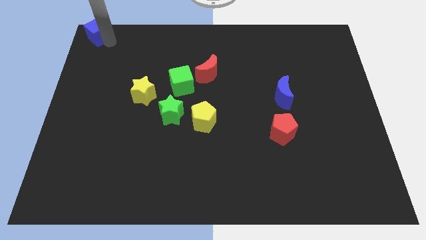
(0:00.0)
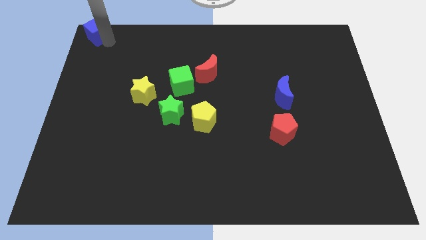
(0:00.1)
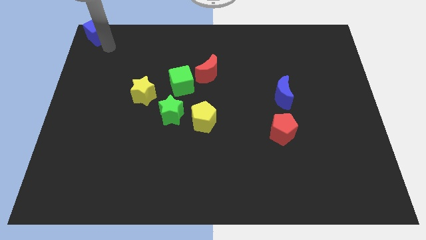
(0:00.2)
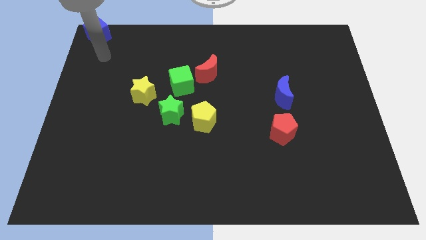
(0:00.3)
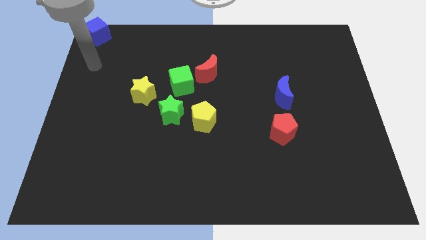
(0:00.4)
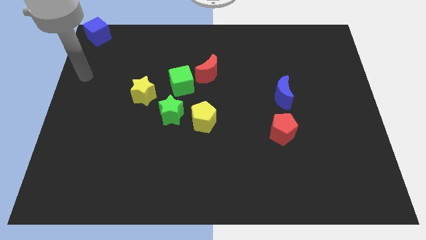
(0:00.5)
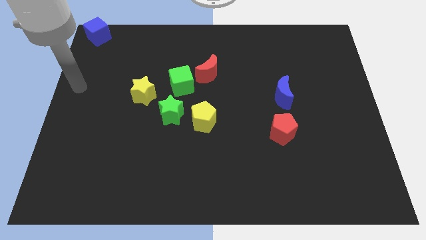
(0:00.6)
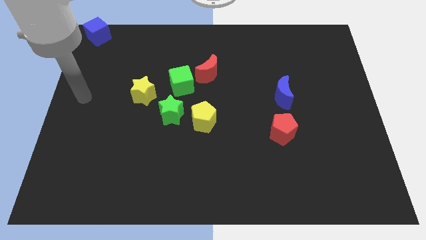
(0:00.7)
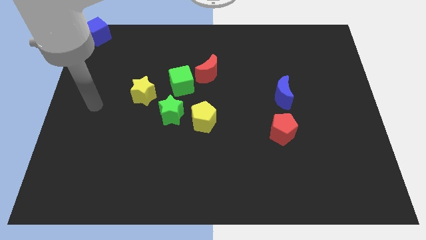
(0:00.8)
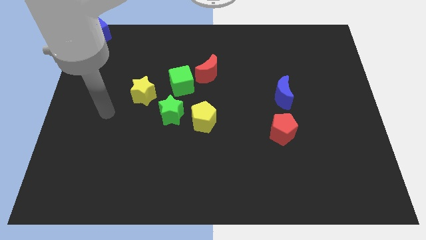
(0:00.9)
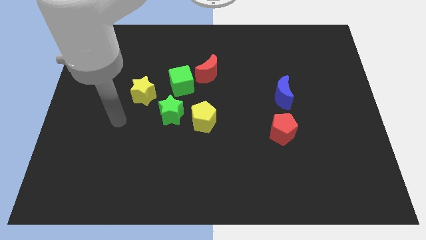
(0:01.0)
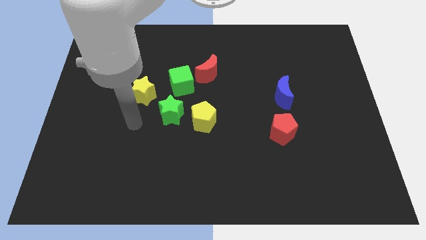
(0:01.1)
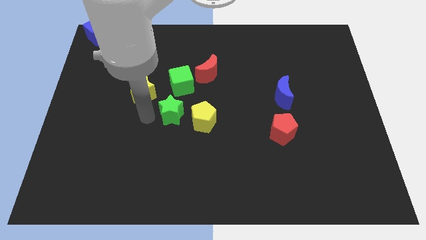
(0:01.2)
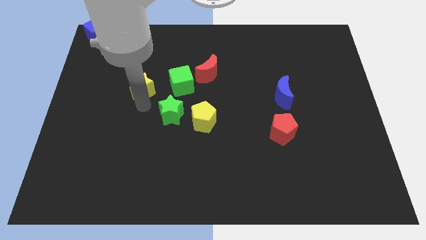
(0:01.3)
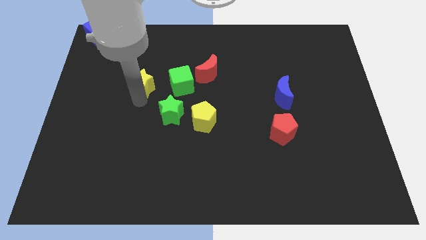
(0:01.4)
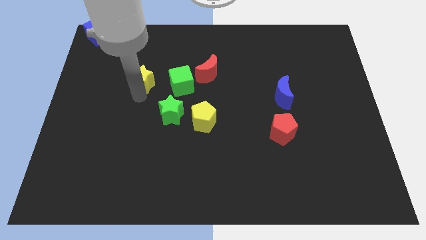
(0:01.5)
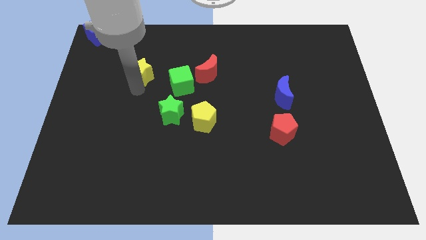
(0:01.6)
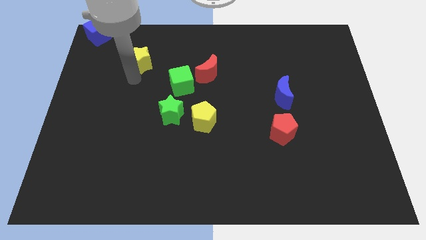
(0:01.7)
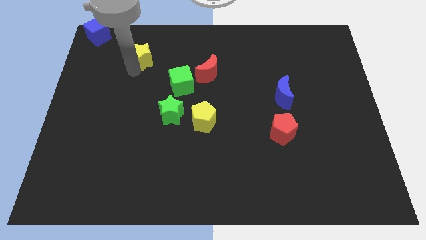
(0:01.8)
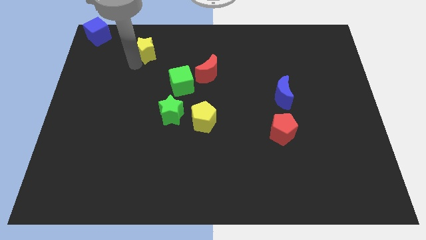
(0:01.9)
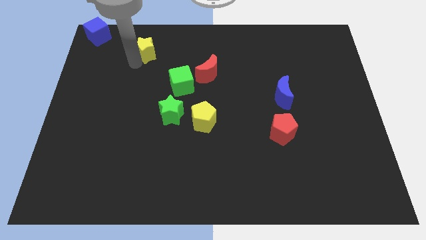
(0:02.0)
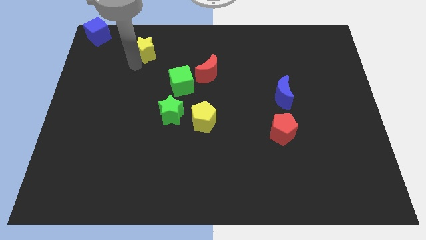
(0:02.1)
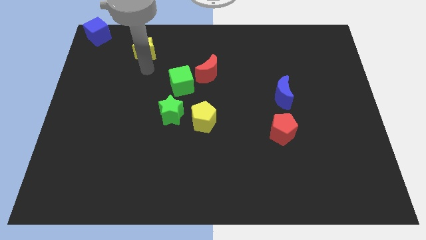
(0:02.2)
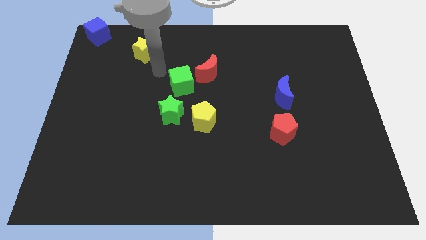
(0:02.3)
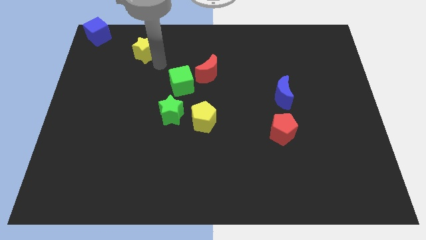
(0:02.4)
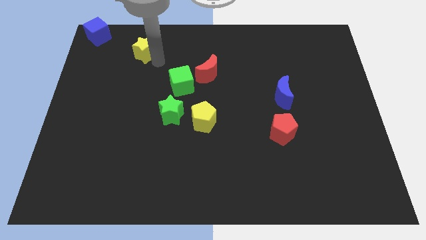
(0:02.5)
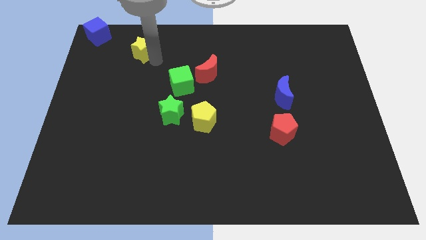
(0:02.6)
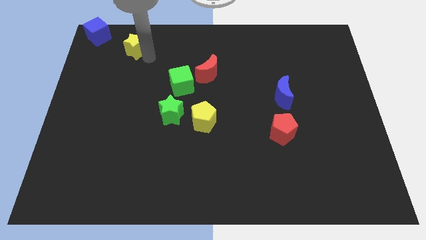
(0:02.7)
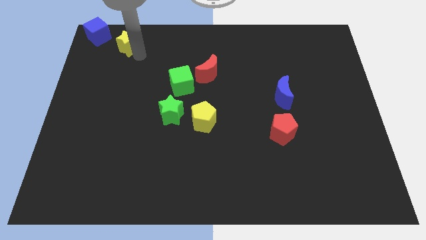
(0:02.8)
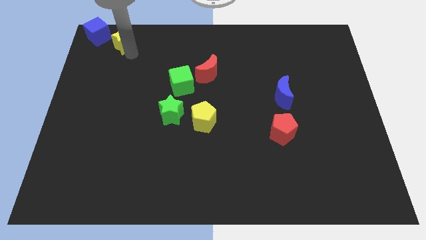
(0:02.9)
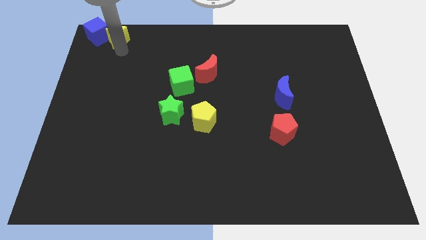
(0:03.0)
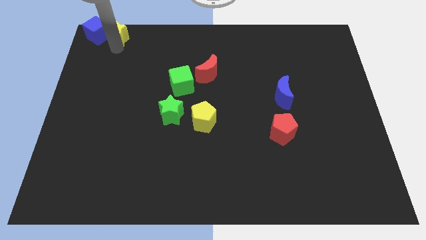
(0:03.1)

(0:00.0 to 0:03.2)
move the yellow star right to the blue cube

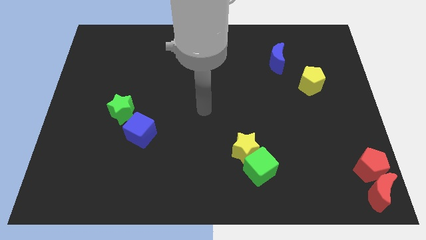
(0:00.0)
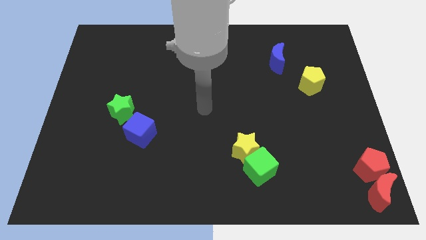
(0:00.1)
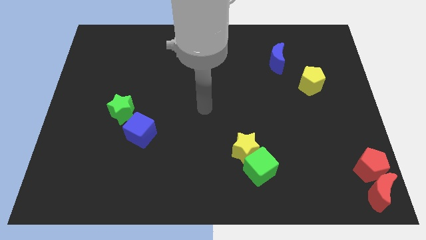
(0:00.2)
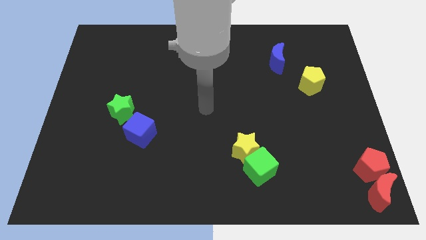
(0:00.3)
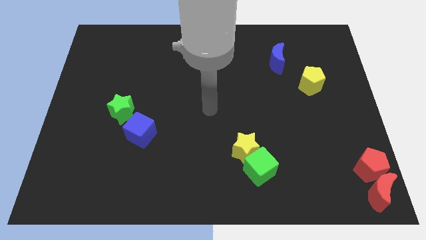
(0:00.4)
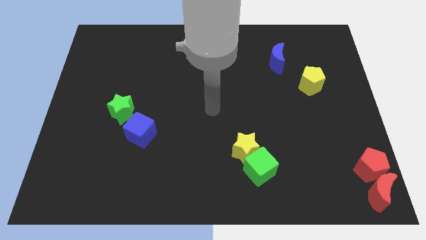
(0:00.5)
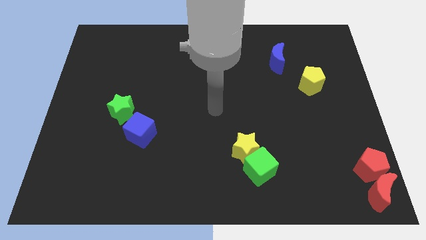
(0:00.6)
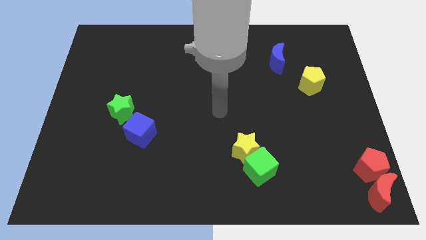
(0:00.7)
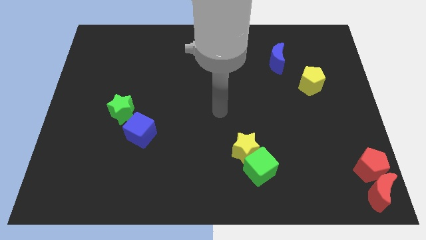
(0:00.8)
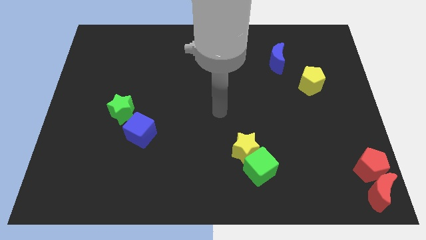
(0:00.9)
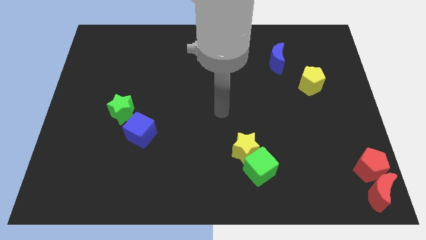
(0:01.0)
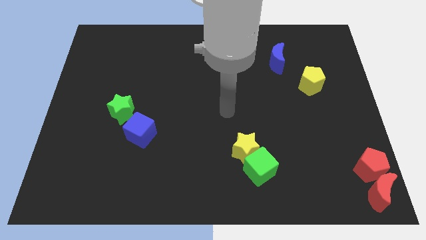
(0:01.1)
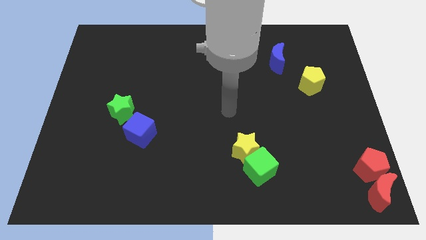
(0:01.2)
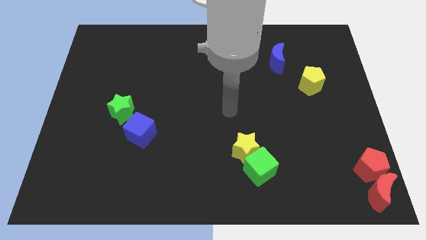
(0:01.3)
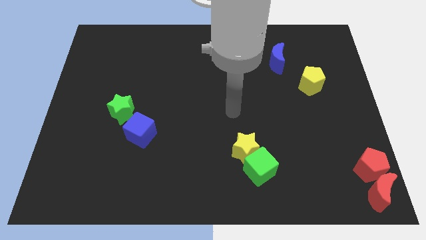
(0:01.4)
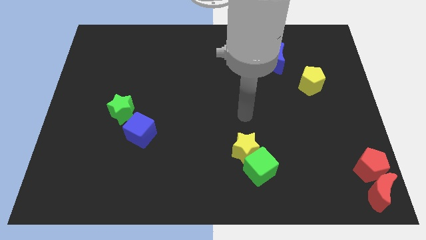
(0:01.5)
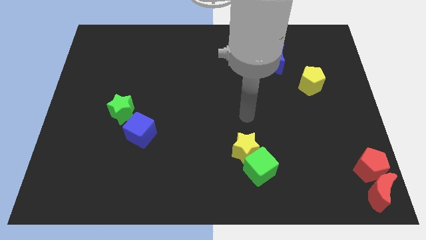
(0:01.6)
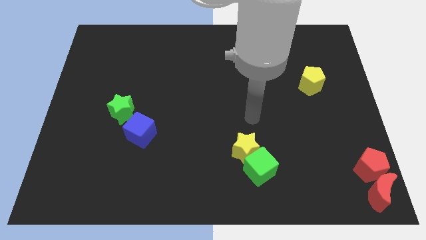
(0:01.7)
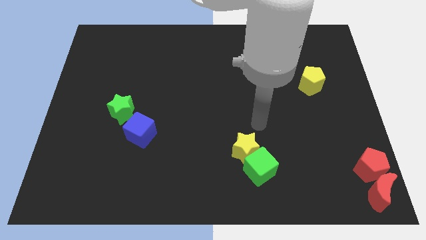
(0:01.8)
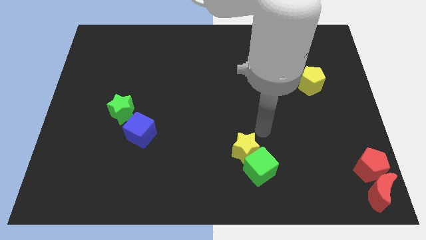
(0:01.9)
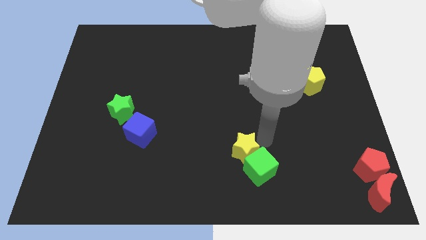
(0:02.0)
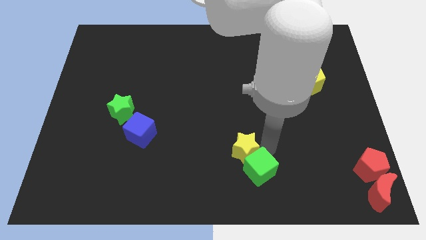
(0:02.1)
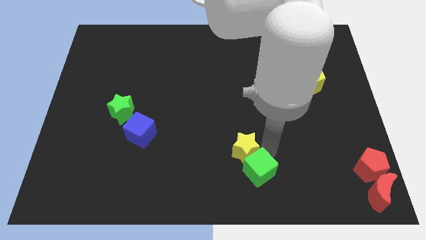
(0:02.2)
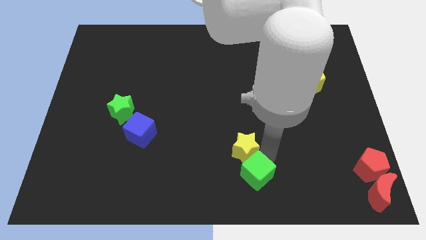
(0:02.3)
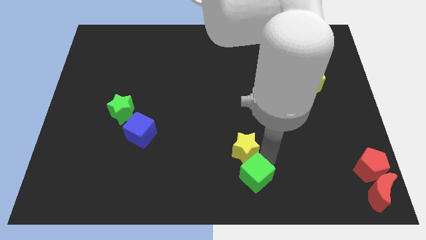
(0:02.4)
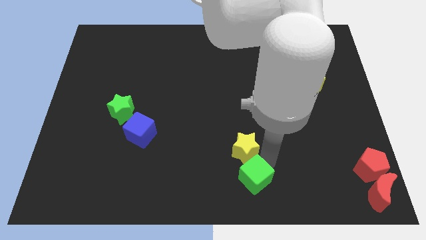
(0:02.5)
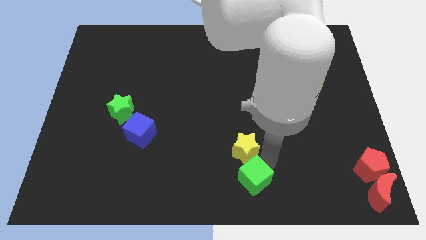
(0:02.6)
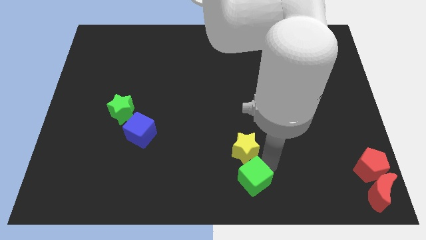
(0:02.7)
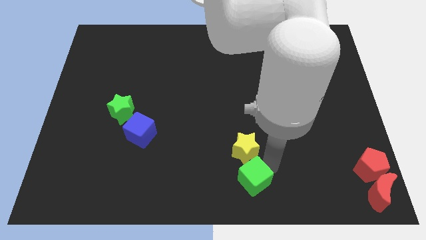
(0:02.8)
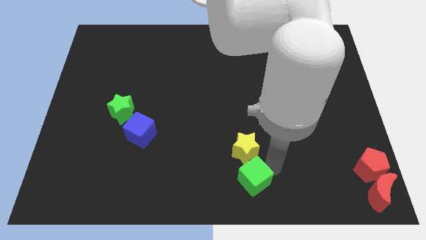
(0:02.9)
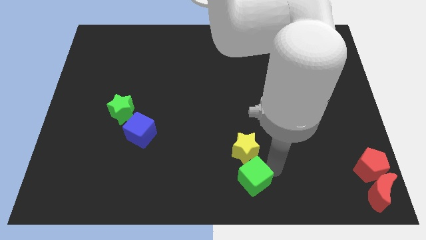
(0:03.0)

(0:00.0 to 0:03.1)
slightly touch the green cube

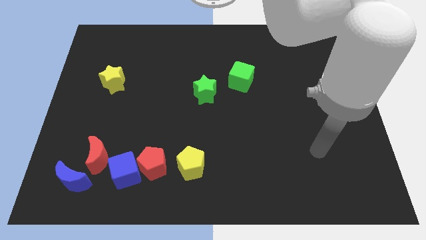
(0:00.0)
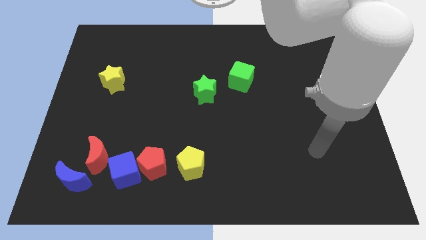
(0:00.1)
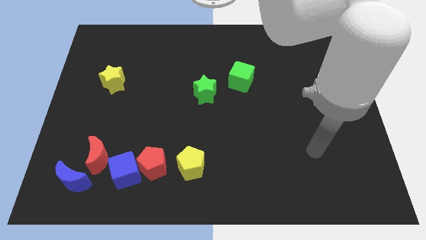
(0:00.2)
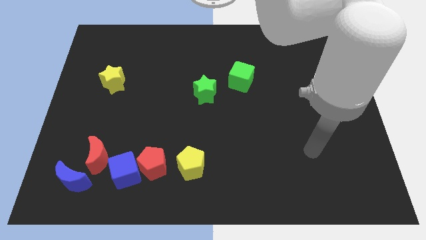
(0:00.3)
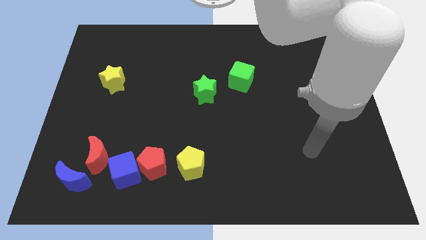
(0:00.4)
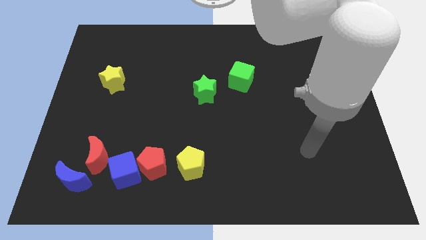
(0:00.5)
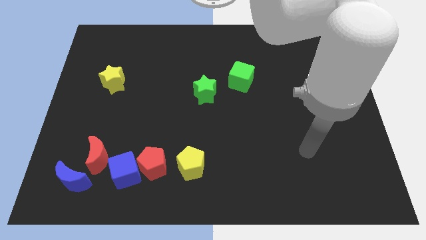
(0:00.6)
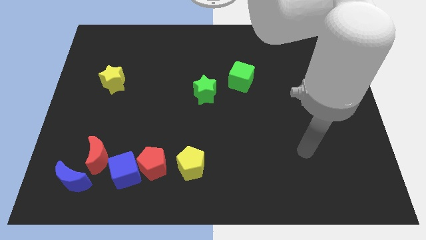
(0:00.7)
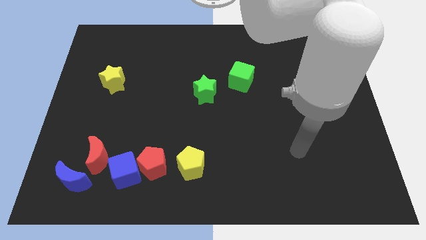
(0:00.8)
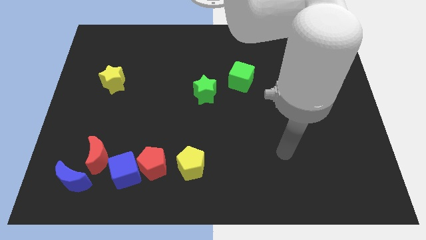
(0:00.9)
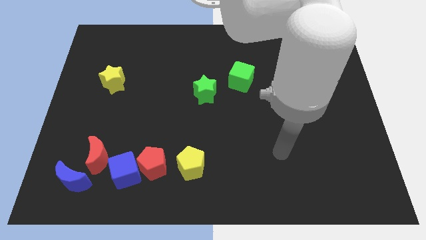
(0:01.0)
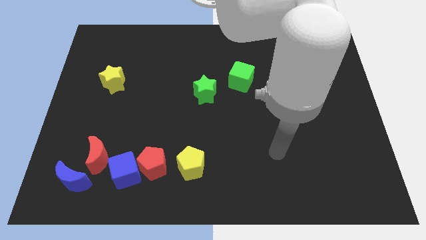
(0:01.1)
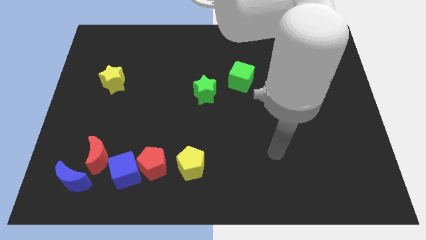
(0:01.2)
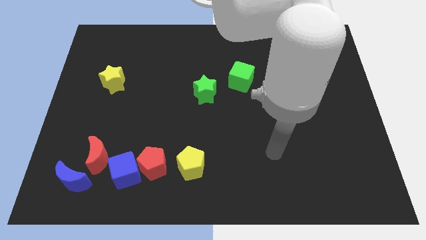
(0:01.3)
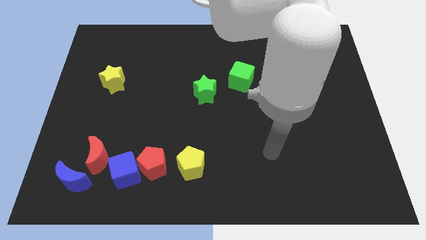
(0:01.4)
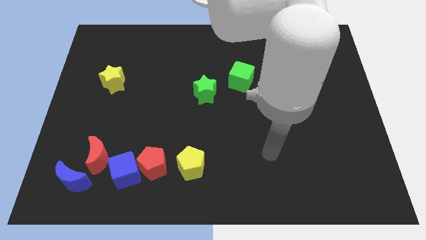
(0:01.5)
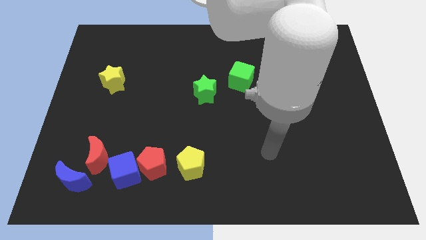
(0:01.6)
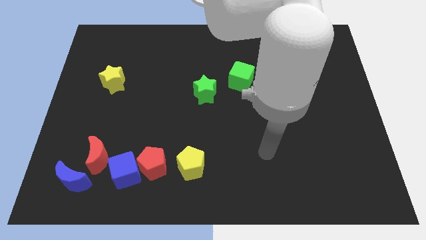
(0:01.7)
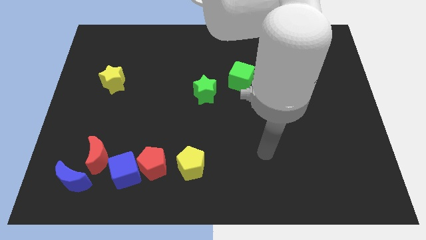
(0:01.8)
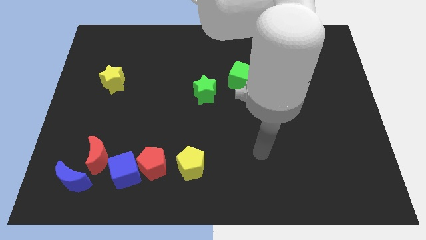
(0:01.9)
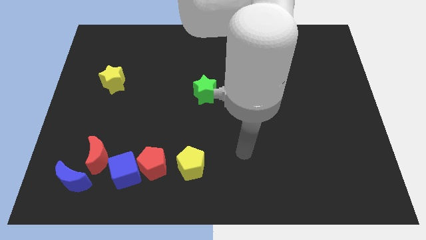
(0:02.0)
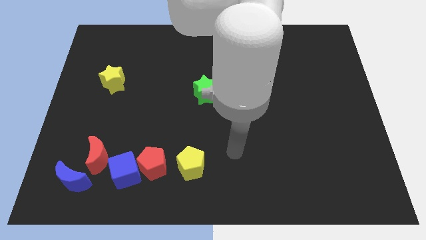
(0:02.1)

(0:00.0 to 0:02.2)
move your arm to the left side a bit

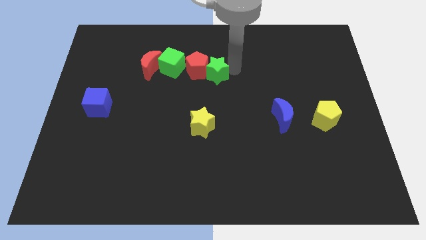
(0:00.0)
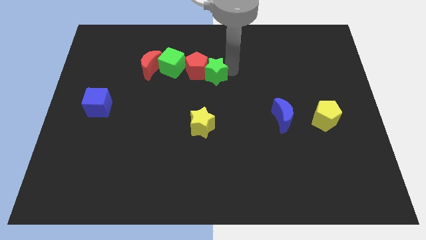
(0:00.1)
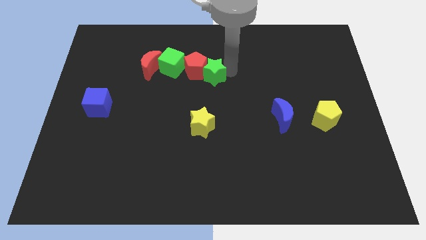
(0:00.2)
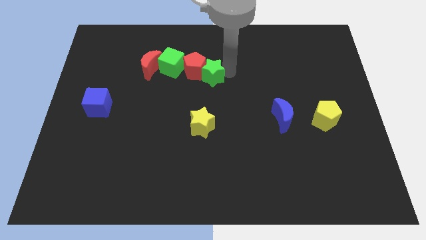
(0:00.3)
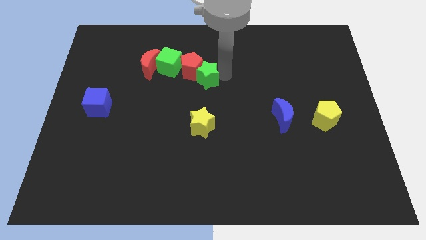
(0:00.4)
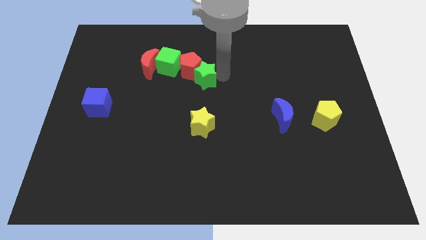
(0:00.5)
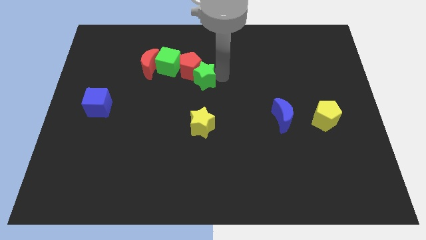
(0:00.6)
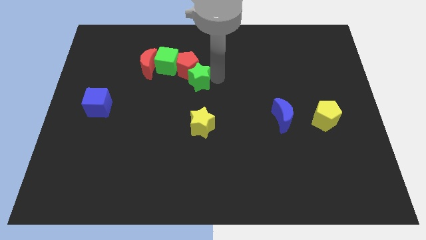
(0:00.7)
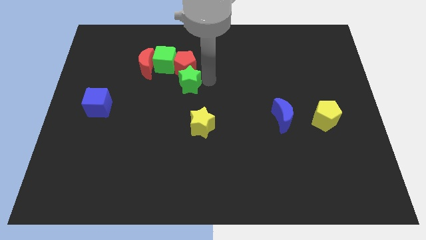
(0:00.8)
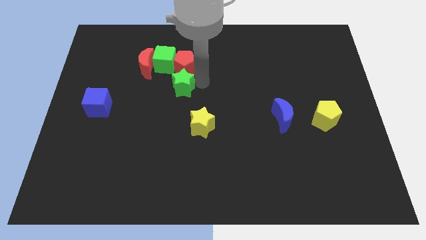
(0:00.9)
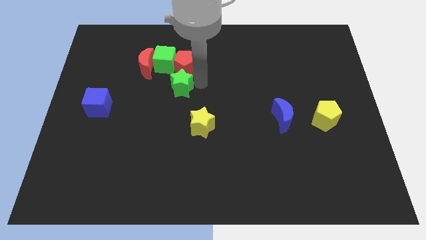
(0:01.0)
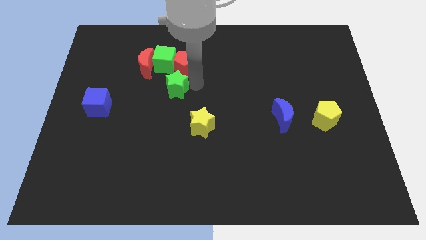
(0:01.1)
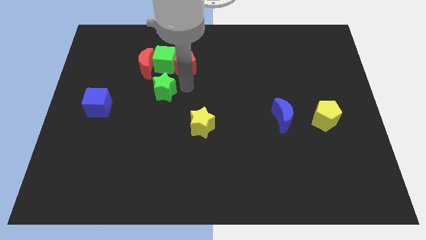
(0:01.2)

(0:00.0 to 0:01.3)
place the green star below the red pentagon
